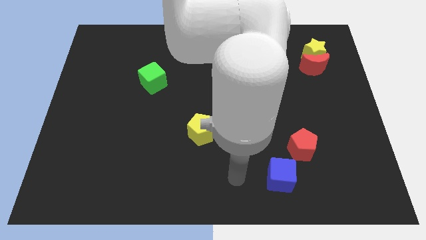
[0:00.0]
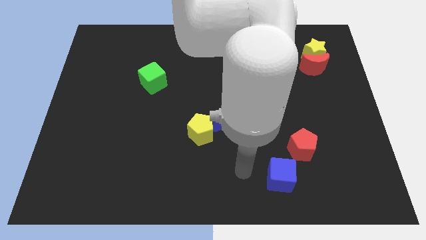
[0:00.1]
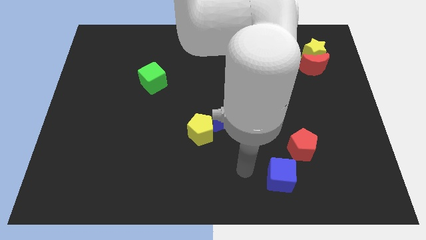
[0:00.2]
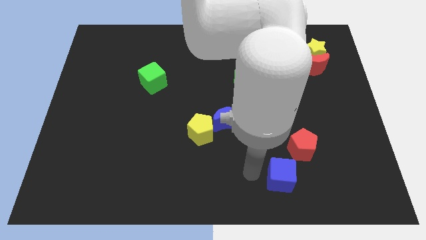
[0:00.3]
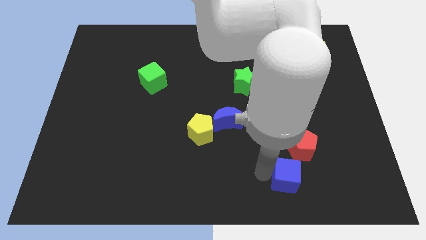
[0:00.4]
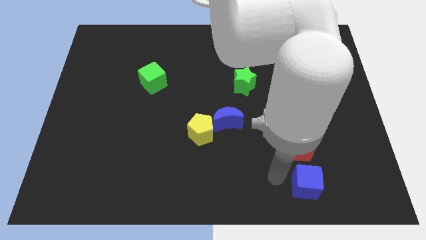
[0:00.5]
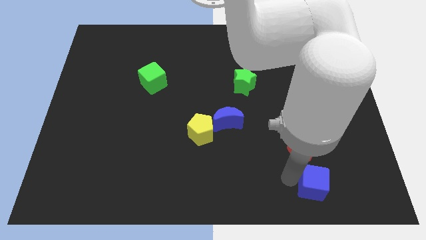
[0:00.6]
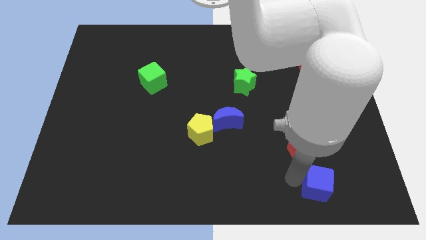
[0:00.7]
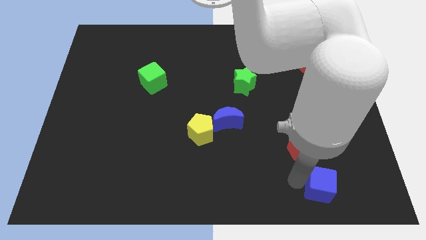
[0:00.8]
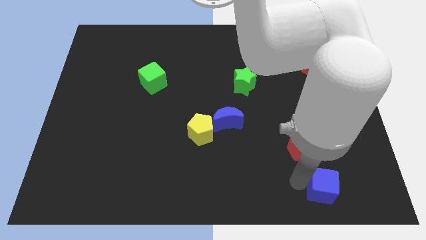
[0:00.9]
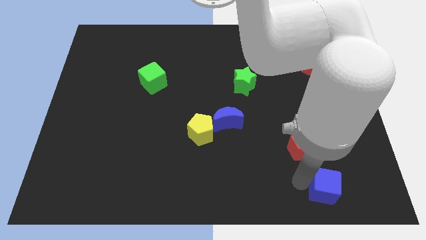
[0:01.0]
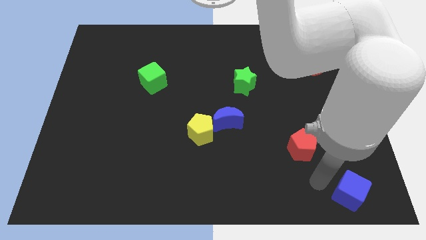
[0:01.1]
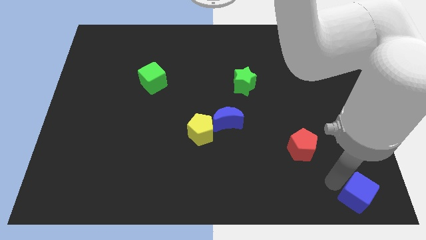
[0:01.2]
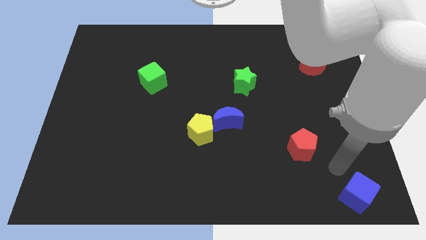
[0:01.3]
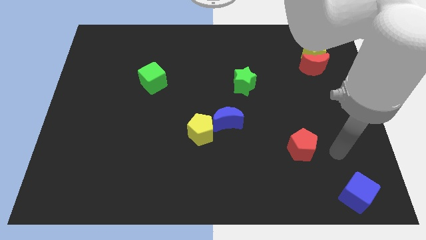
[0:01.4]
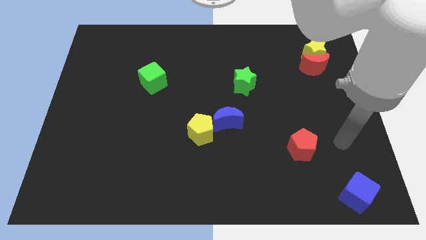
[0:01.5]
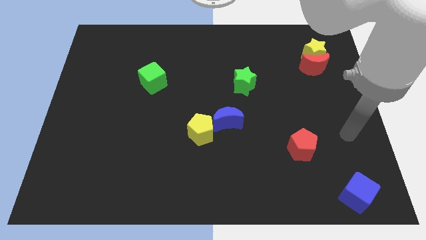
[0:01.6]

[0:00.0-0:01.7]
push the blue cube to the bottom right corner

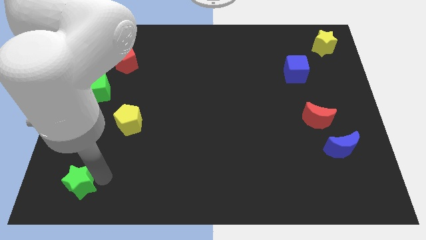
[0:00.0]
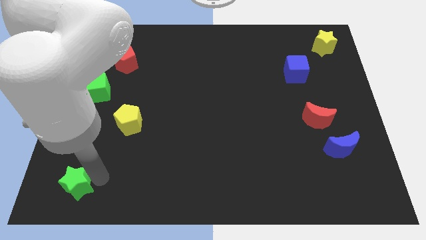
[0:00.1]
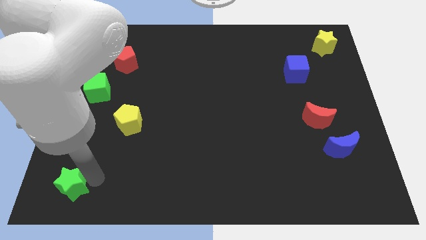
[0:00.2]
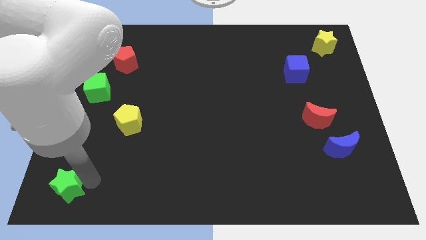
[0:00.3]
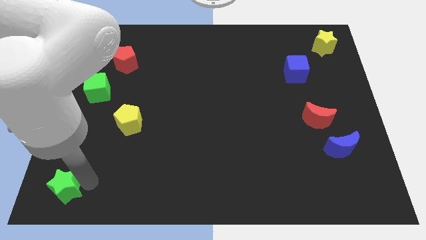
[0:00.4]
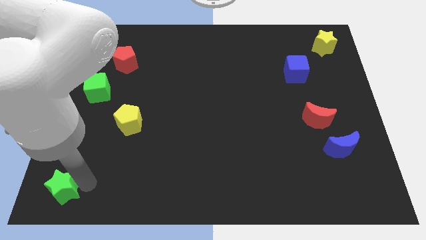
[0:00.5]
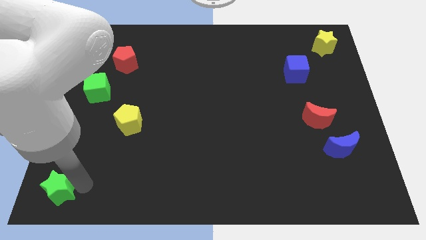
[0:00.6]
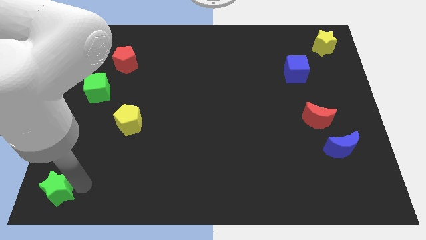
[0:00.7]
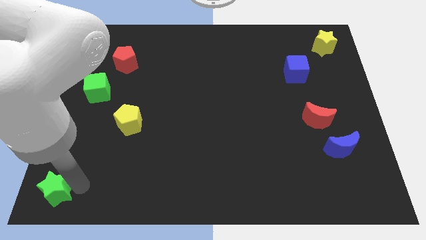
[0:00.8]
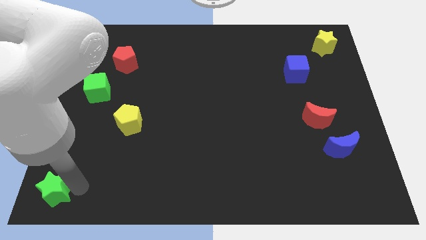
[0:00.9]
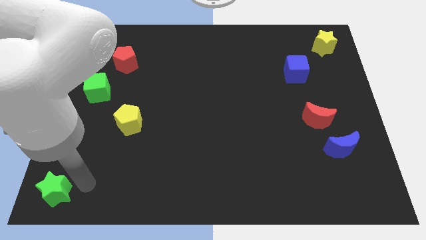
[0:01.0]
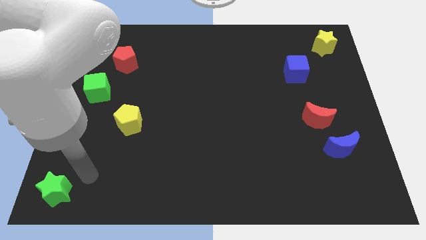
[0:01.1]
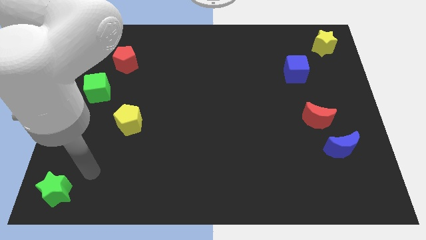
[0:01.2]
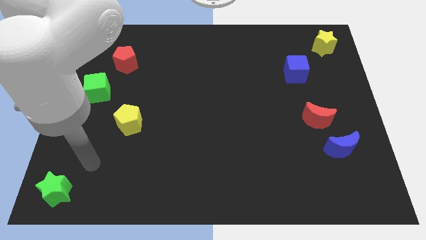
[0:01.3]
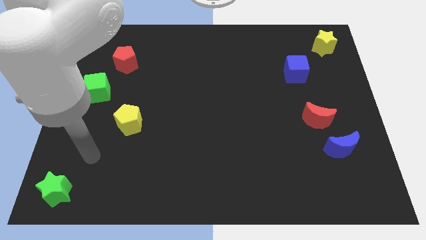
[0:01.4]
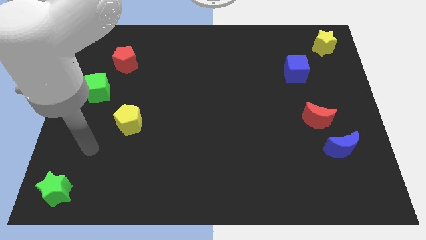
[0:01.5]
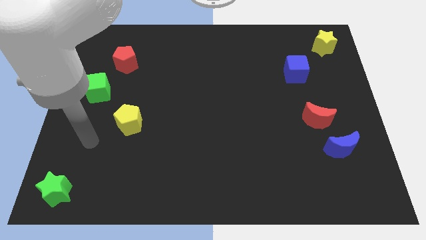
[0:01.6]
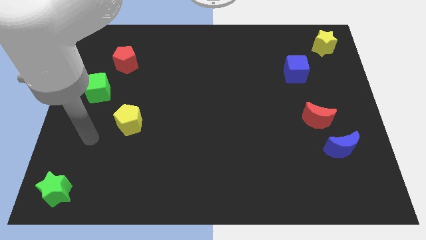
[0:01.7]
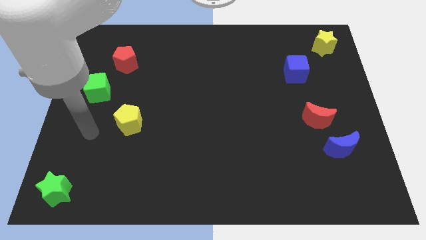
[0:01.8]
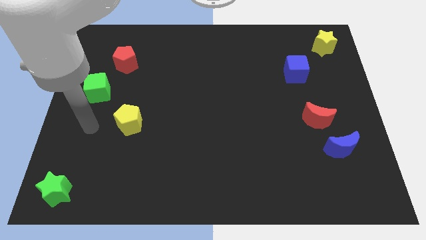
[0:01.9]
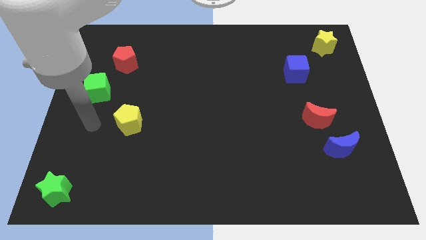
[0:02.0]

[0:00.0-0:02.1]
place the green star at the bottom left side of the board

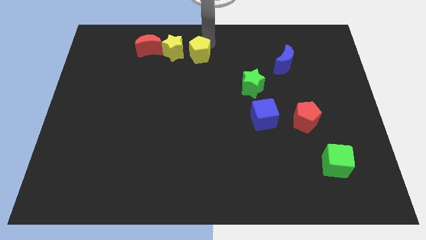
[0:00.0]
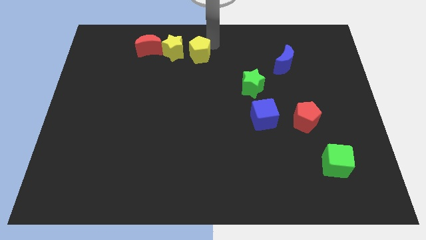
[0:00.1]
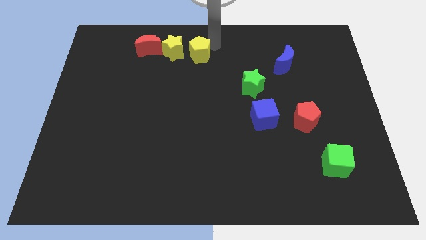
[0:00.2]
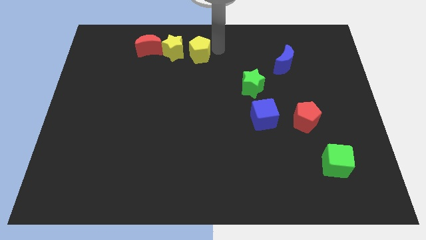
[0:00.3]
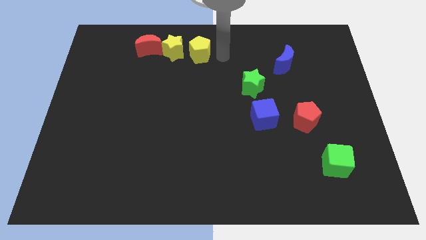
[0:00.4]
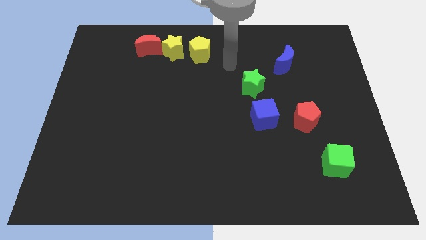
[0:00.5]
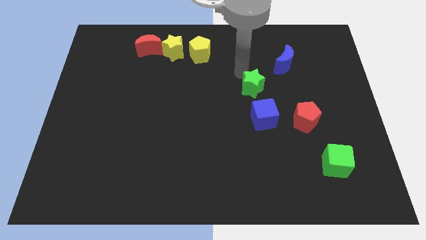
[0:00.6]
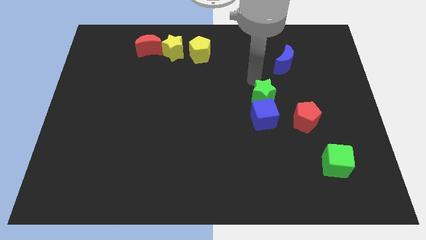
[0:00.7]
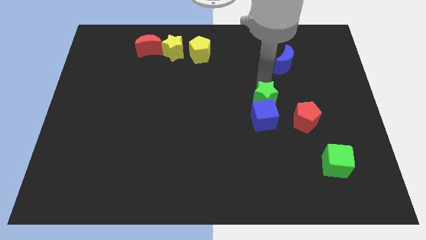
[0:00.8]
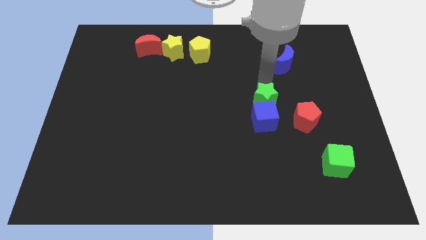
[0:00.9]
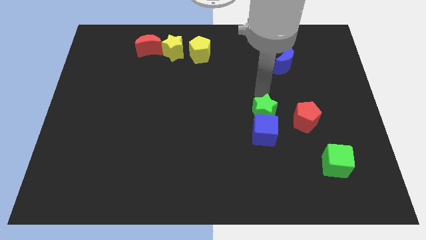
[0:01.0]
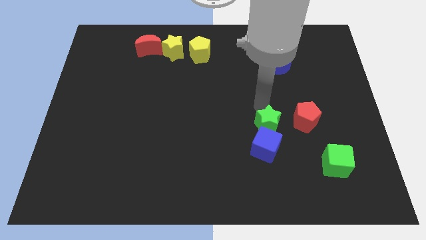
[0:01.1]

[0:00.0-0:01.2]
push the green star into the blue cube

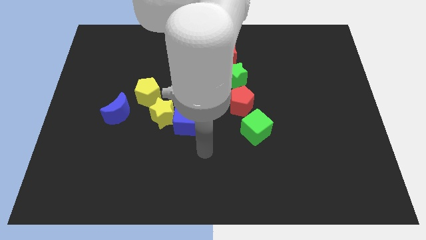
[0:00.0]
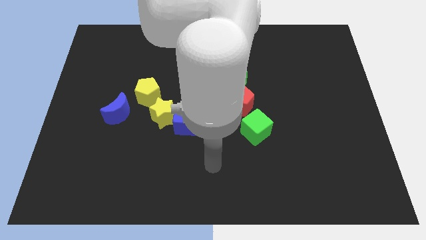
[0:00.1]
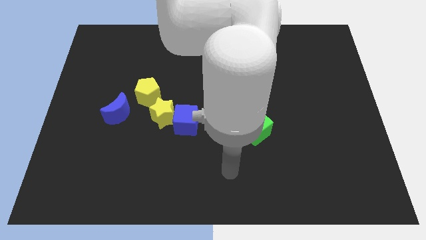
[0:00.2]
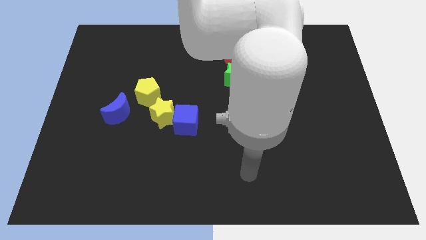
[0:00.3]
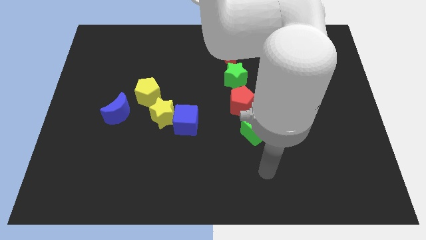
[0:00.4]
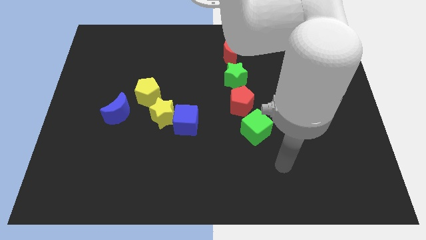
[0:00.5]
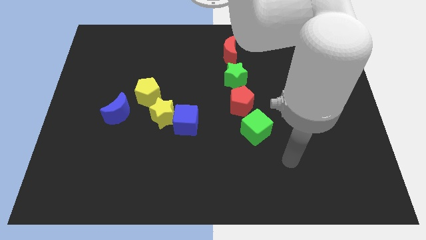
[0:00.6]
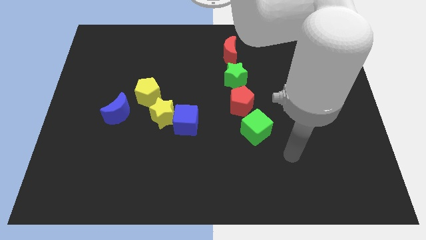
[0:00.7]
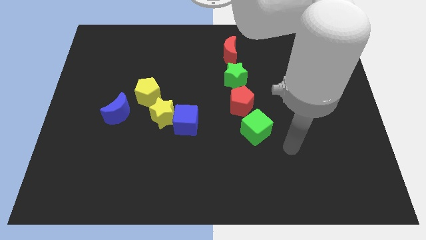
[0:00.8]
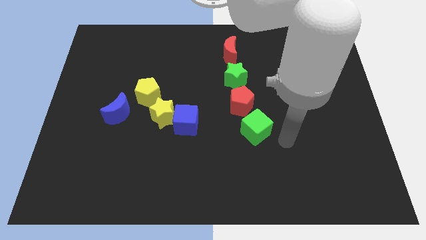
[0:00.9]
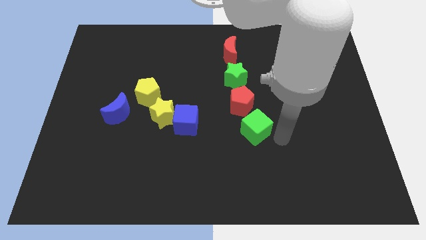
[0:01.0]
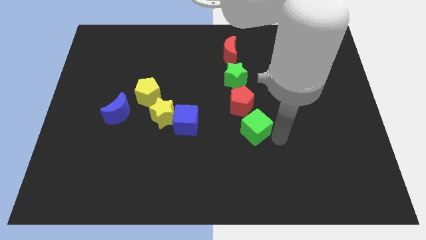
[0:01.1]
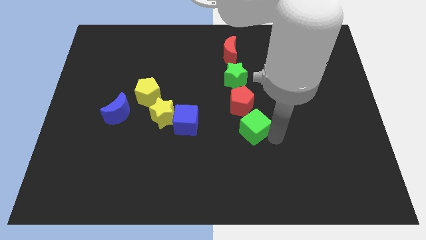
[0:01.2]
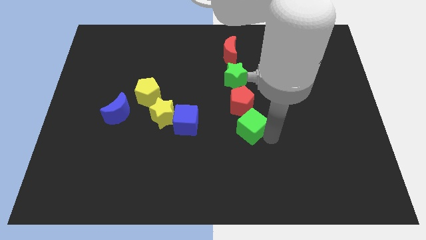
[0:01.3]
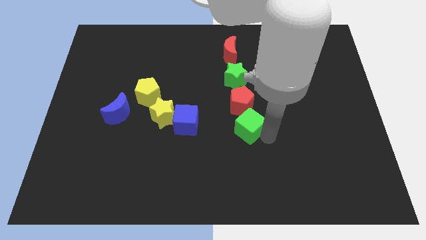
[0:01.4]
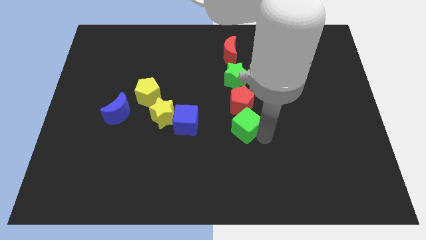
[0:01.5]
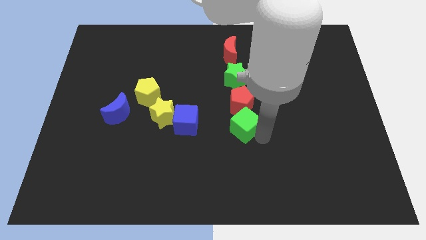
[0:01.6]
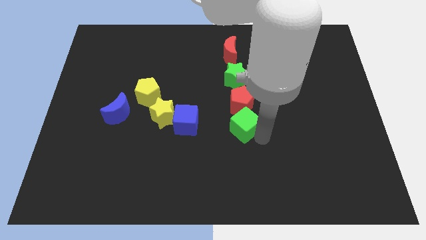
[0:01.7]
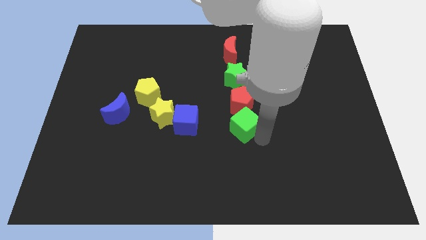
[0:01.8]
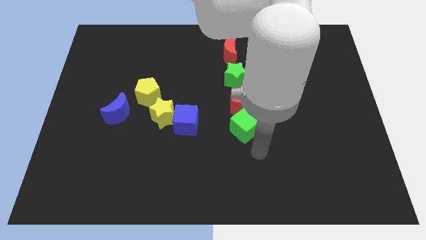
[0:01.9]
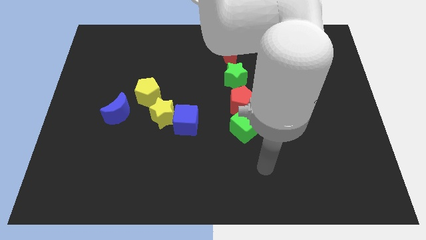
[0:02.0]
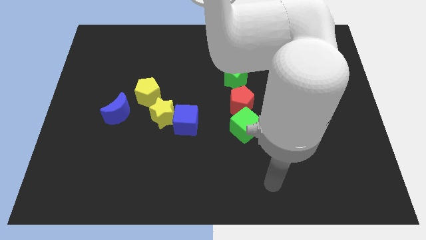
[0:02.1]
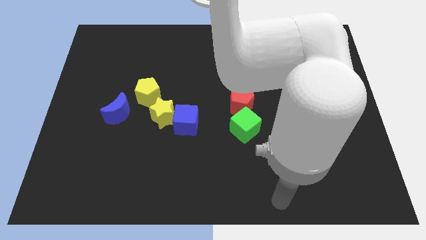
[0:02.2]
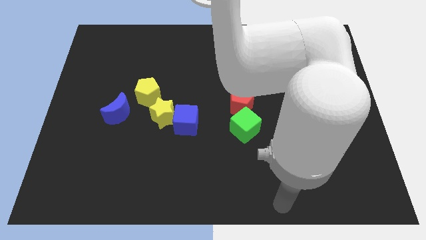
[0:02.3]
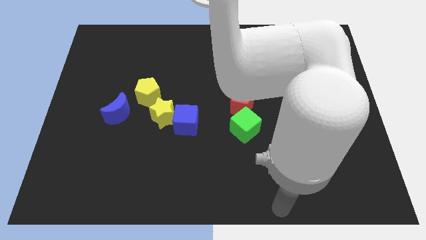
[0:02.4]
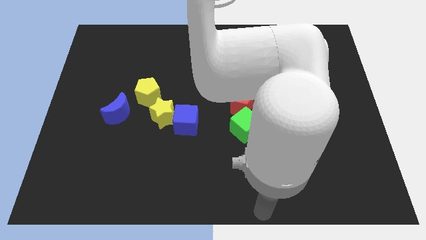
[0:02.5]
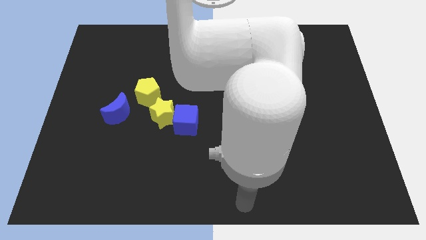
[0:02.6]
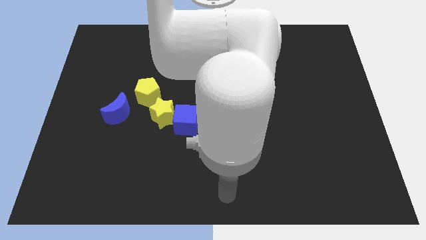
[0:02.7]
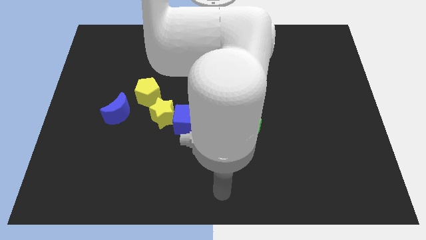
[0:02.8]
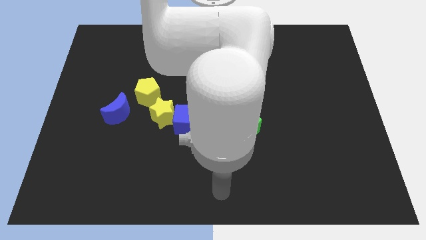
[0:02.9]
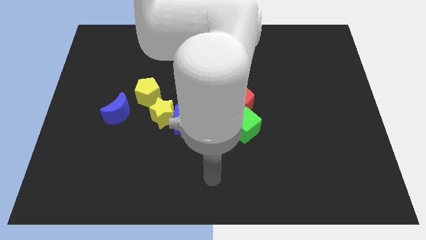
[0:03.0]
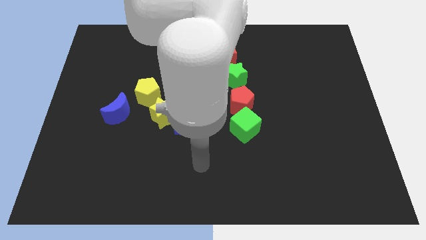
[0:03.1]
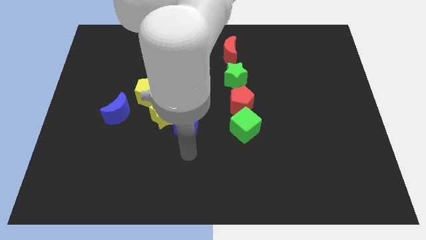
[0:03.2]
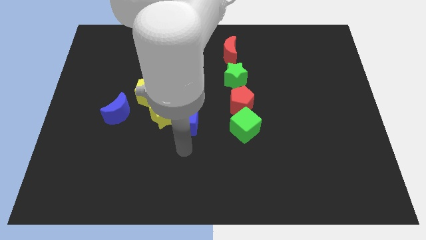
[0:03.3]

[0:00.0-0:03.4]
move the green cube to the bottom side of the red pentagon

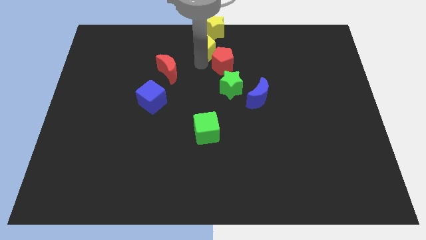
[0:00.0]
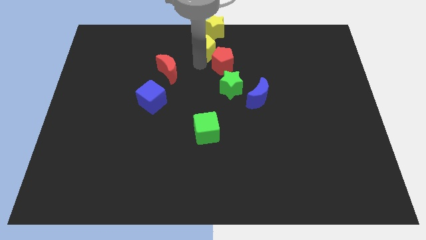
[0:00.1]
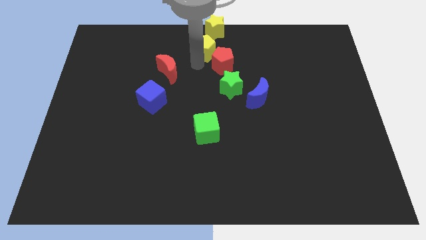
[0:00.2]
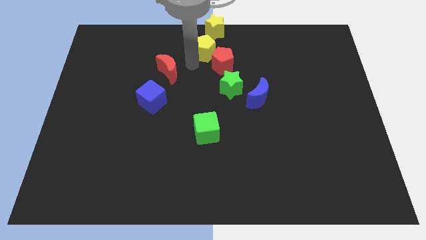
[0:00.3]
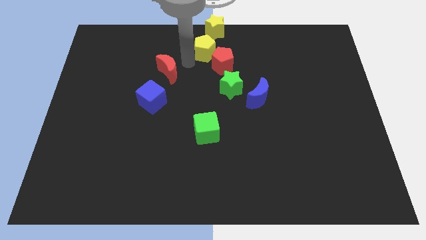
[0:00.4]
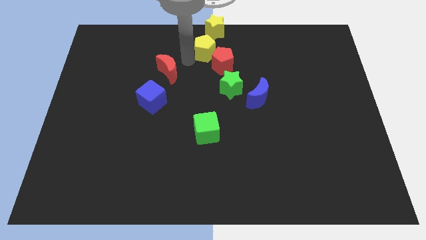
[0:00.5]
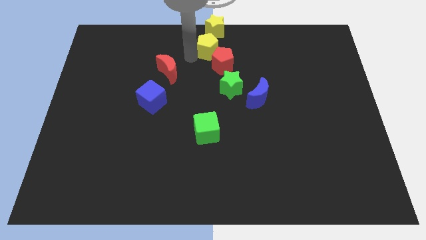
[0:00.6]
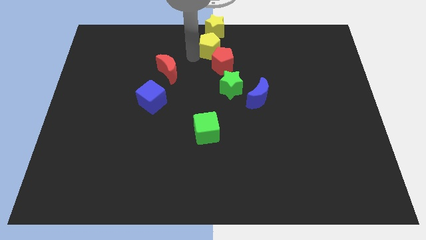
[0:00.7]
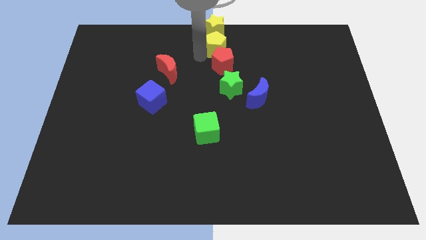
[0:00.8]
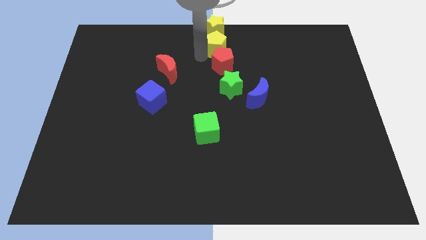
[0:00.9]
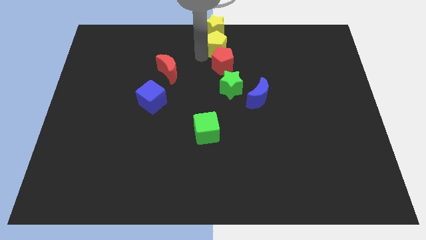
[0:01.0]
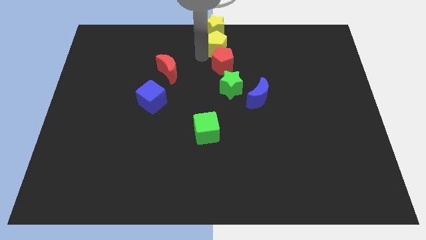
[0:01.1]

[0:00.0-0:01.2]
place yellow pentagon in between the yellow star and the red pentagon
